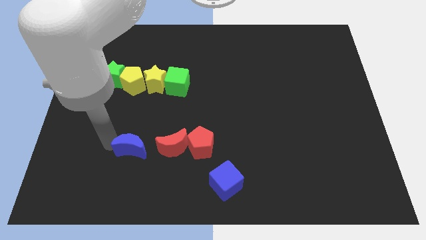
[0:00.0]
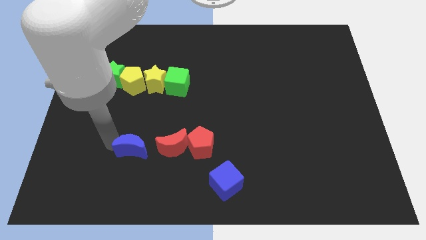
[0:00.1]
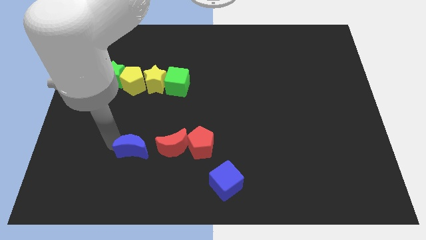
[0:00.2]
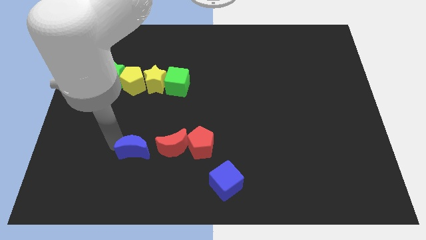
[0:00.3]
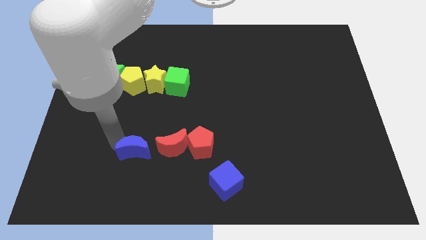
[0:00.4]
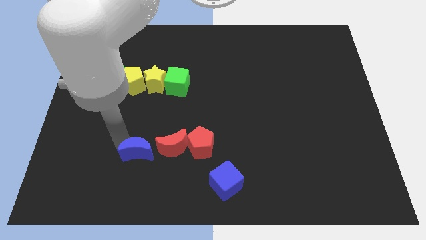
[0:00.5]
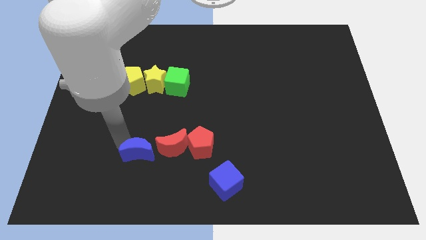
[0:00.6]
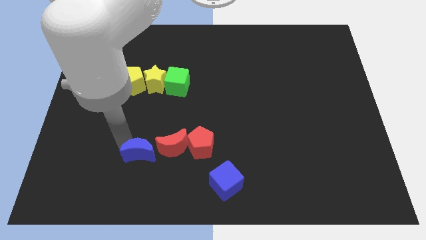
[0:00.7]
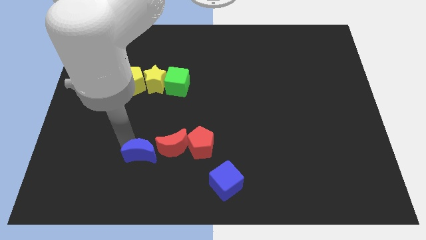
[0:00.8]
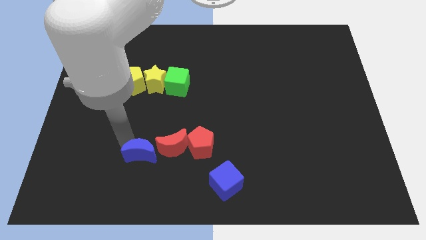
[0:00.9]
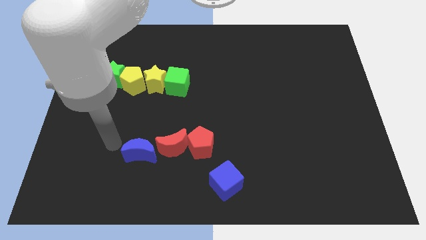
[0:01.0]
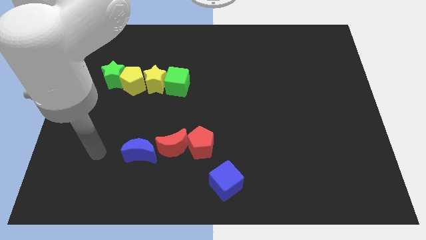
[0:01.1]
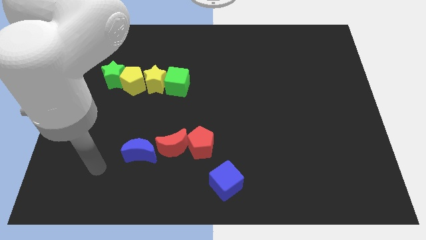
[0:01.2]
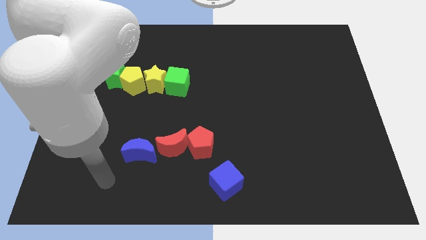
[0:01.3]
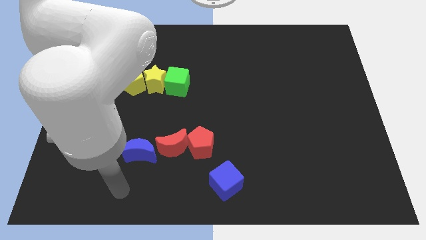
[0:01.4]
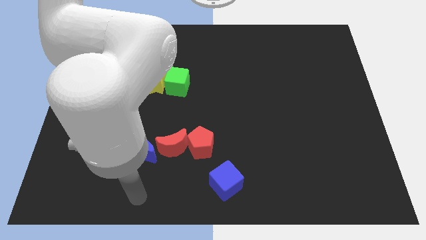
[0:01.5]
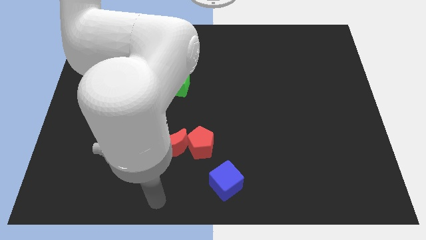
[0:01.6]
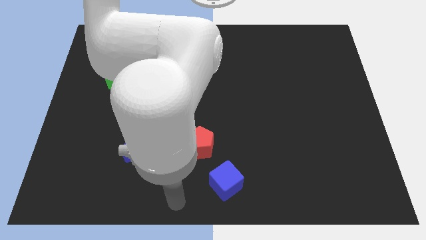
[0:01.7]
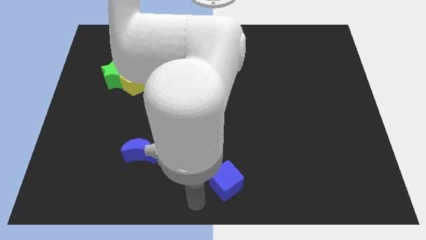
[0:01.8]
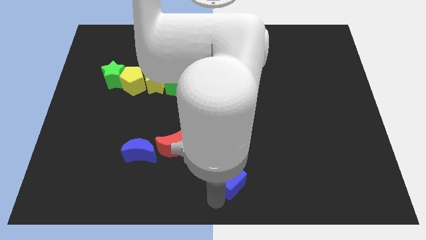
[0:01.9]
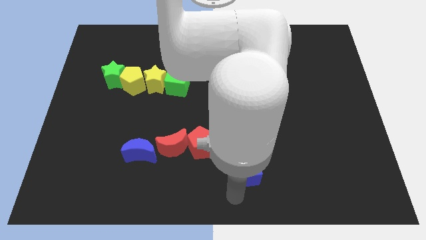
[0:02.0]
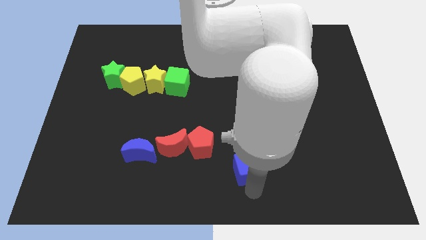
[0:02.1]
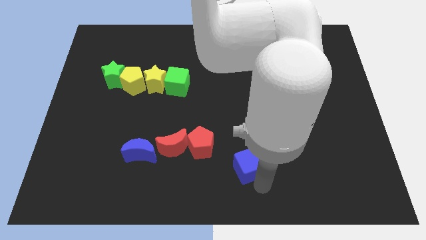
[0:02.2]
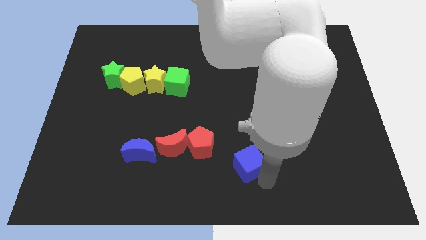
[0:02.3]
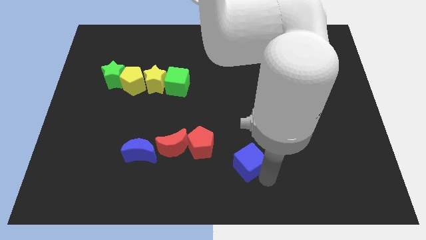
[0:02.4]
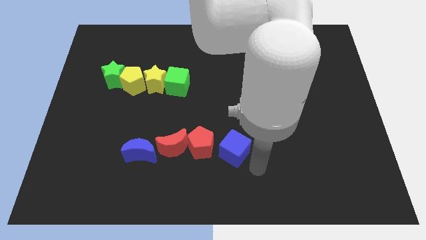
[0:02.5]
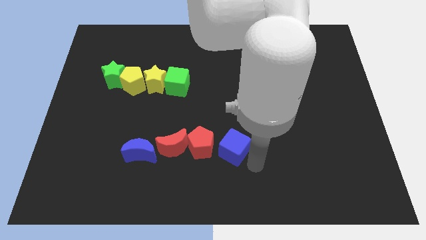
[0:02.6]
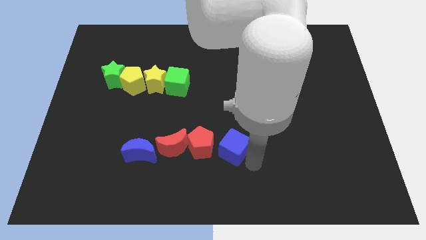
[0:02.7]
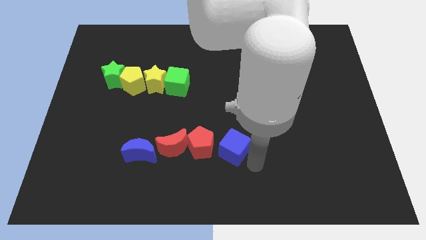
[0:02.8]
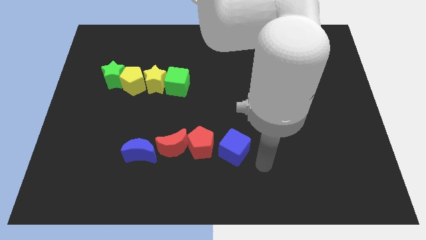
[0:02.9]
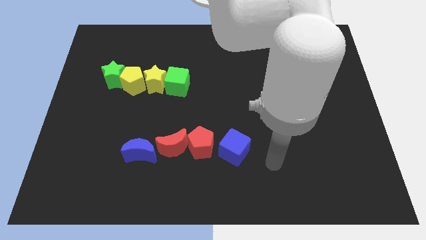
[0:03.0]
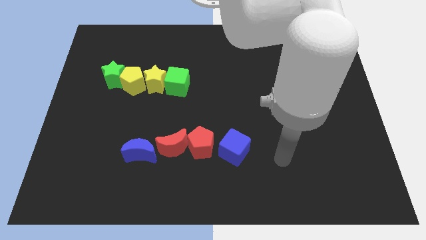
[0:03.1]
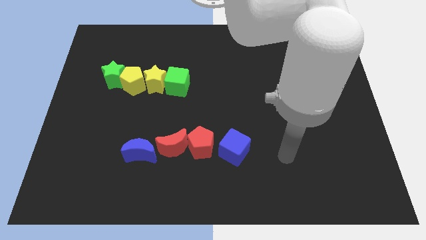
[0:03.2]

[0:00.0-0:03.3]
adjust both the blue blocks to form a horizontal line with red blocks

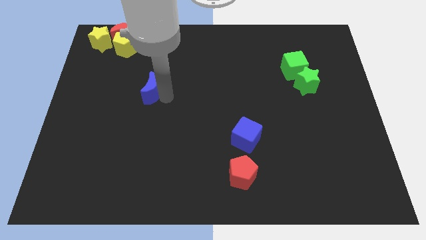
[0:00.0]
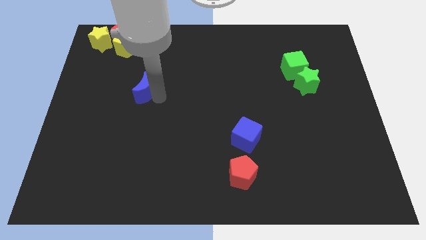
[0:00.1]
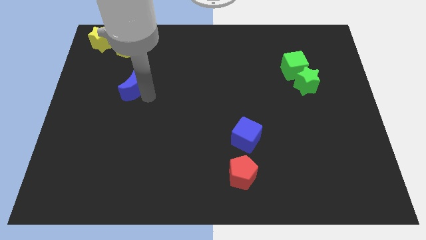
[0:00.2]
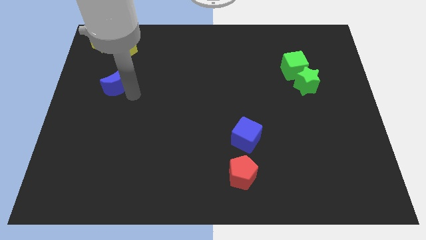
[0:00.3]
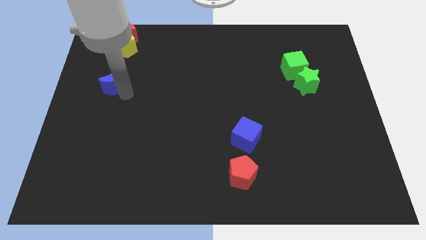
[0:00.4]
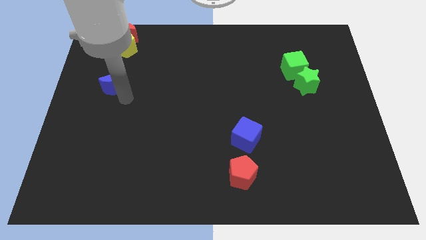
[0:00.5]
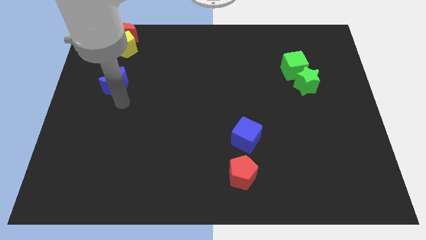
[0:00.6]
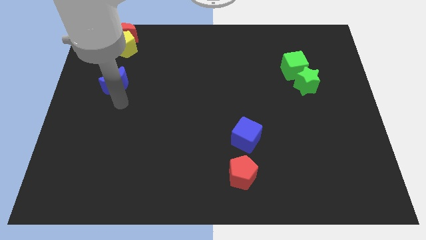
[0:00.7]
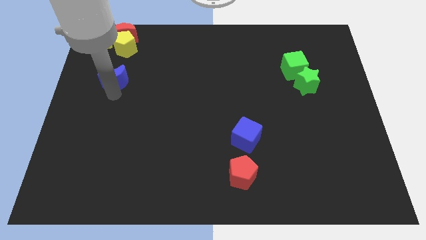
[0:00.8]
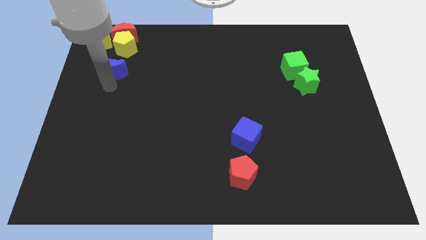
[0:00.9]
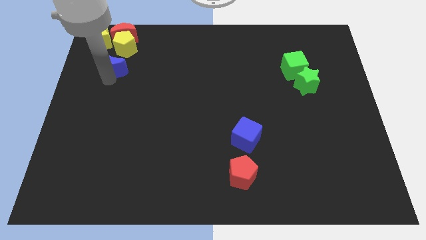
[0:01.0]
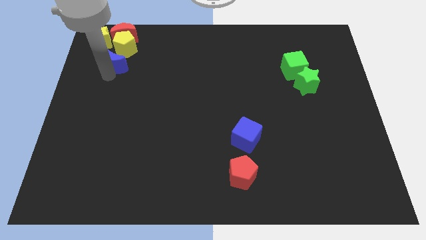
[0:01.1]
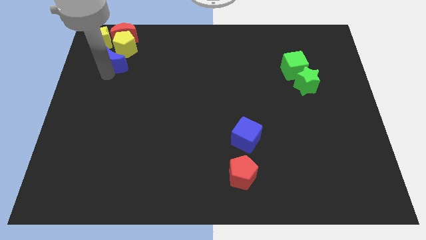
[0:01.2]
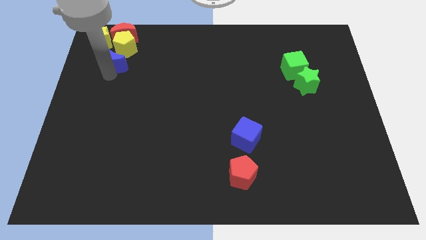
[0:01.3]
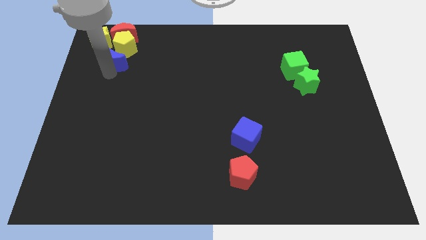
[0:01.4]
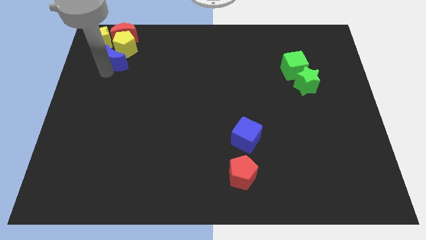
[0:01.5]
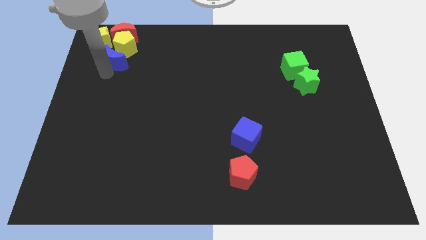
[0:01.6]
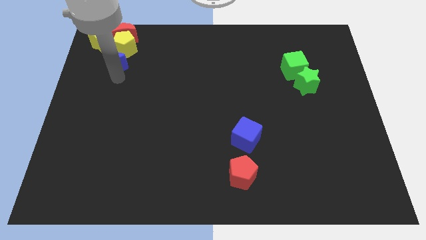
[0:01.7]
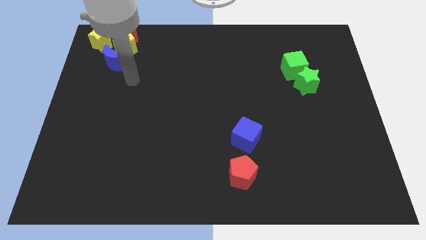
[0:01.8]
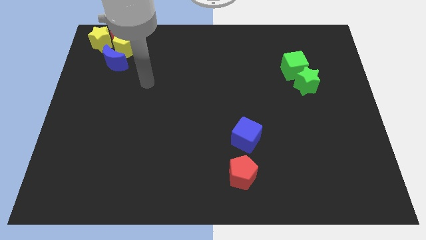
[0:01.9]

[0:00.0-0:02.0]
push the blue crescent into the group of blocks

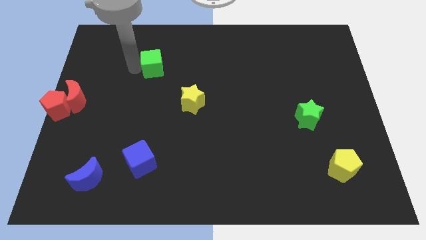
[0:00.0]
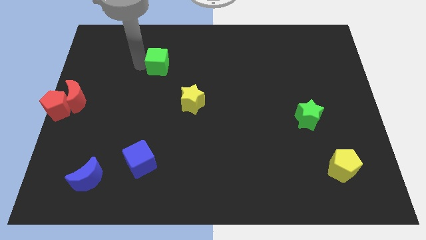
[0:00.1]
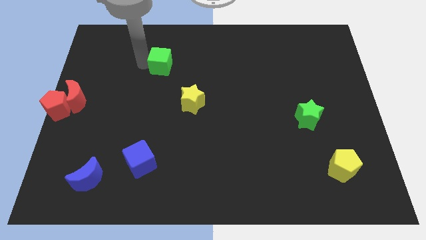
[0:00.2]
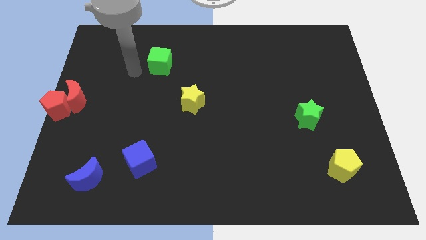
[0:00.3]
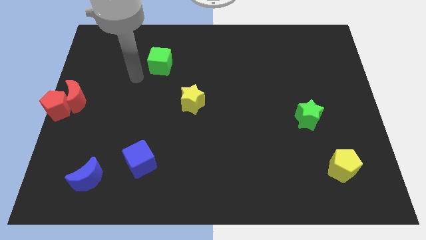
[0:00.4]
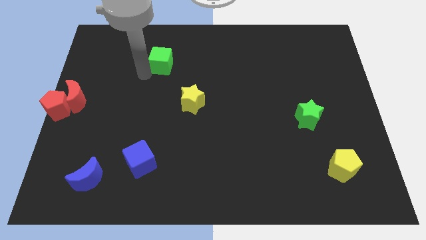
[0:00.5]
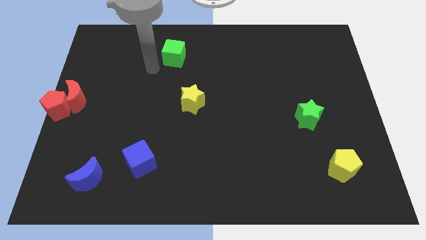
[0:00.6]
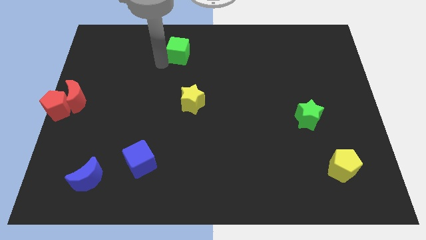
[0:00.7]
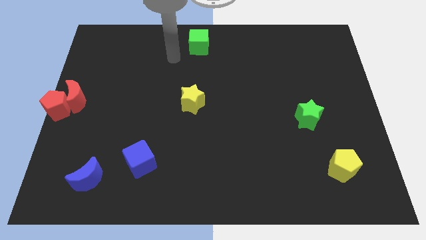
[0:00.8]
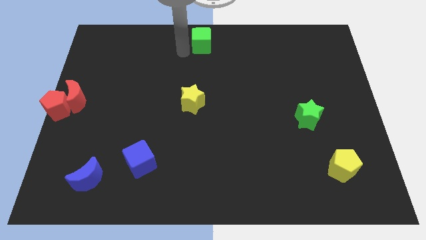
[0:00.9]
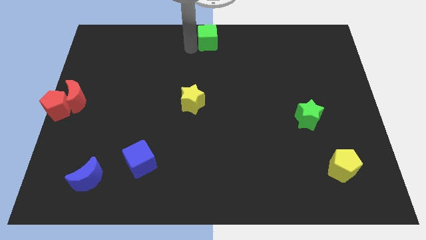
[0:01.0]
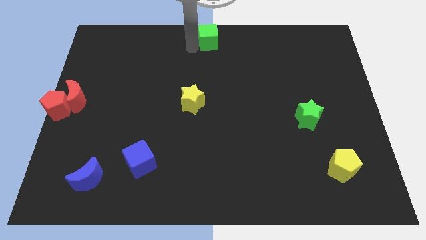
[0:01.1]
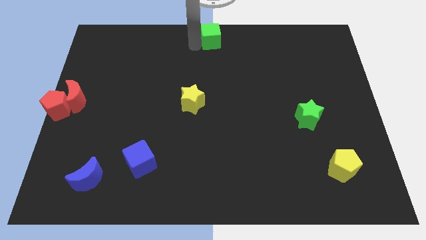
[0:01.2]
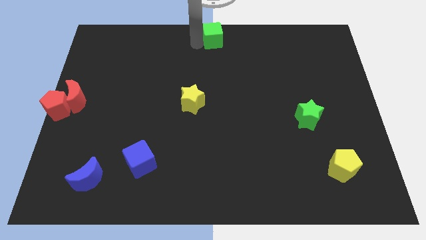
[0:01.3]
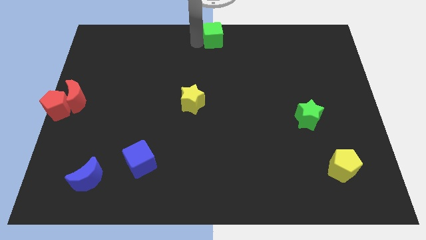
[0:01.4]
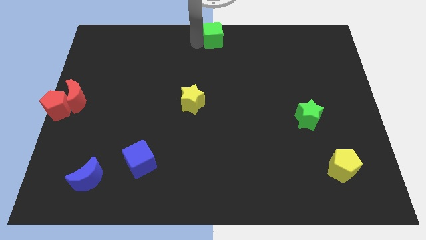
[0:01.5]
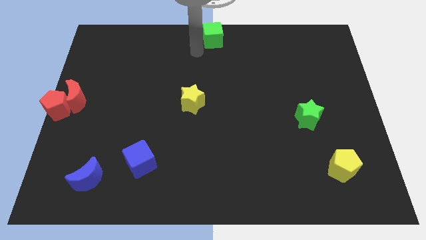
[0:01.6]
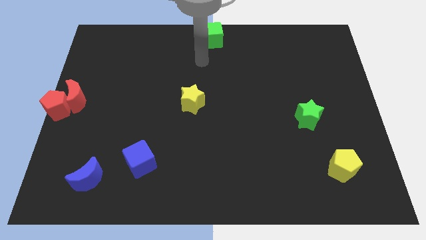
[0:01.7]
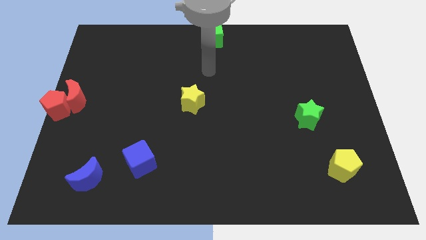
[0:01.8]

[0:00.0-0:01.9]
place the green cube to the top center of the board

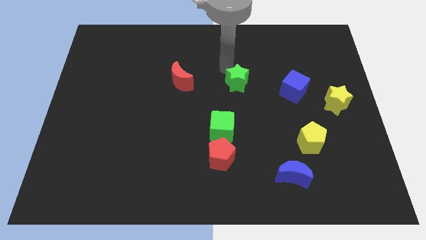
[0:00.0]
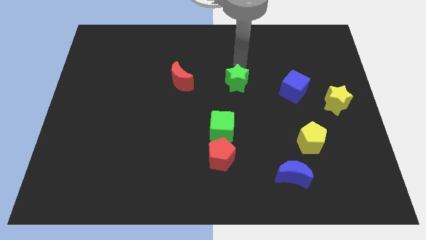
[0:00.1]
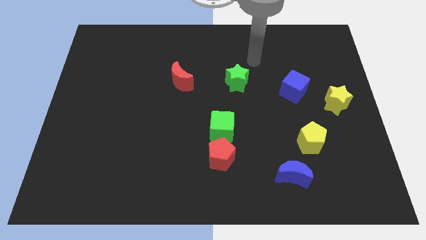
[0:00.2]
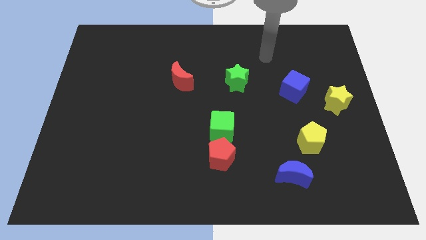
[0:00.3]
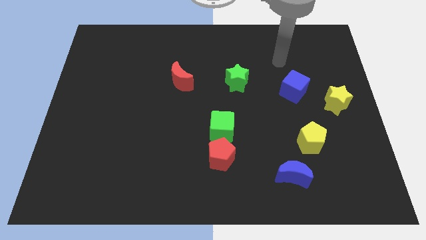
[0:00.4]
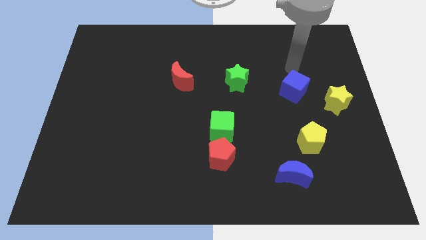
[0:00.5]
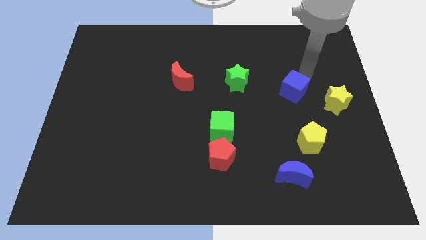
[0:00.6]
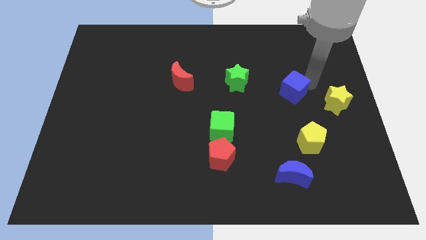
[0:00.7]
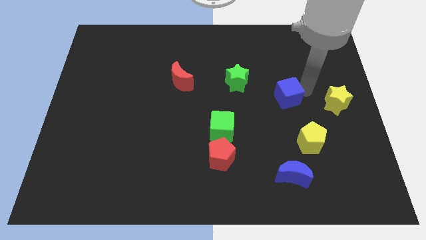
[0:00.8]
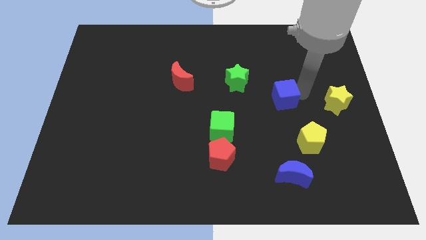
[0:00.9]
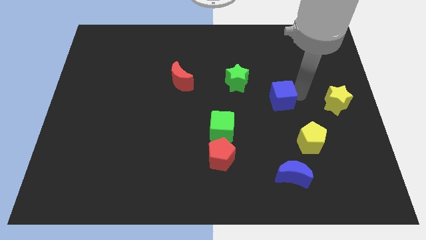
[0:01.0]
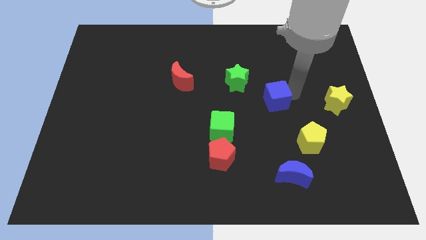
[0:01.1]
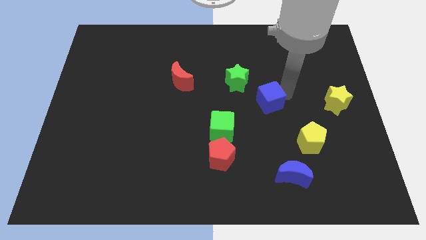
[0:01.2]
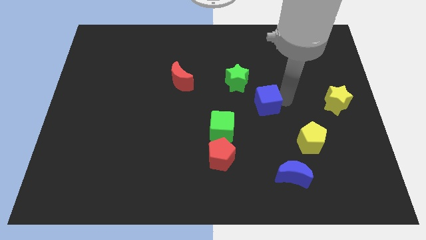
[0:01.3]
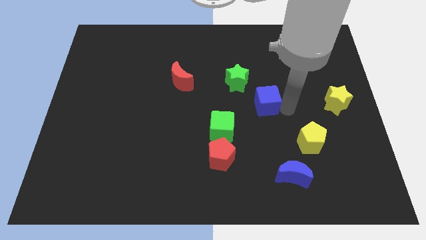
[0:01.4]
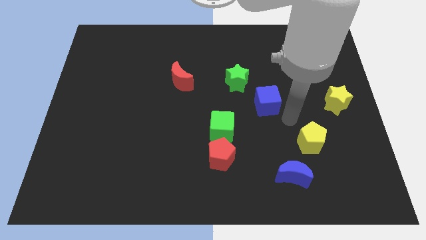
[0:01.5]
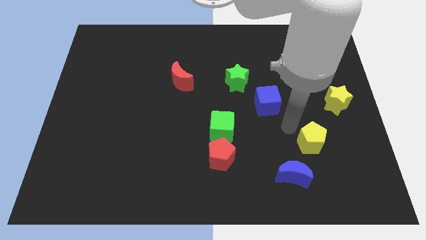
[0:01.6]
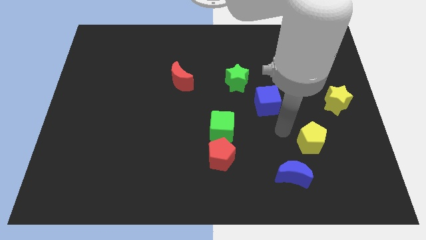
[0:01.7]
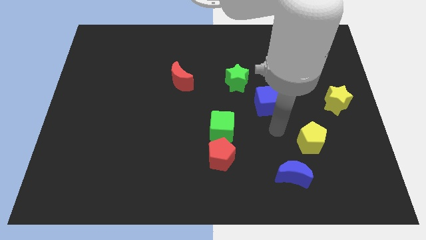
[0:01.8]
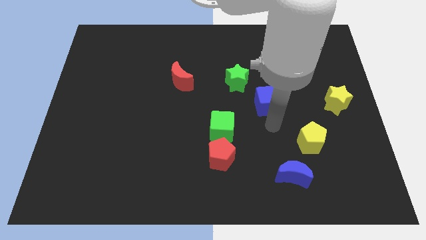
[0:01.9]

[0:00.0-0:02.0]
place the blue cube between the green star and yellow star
